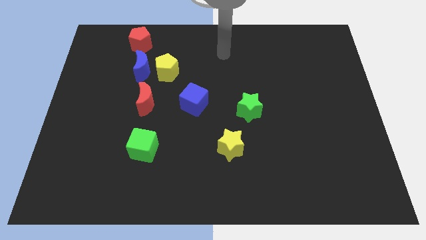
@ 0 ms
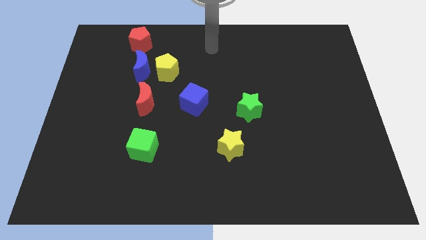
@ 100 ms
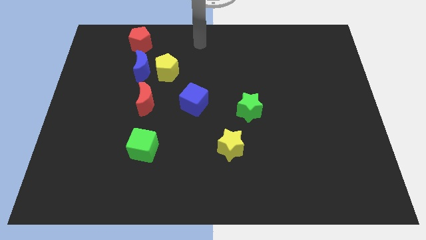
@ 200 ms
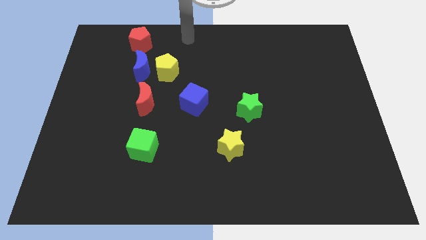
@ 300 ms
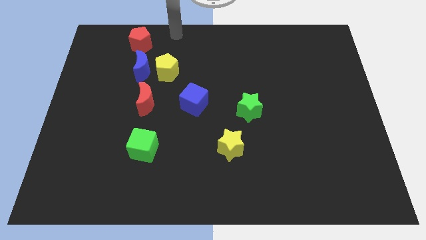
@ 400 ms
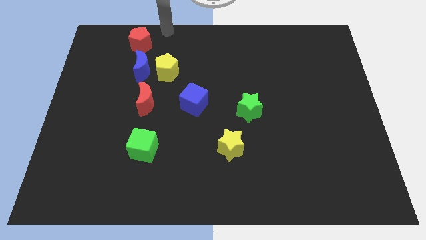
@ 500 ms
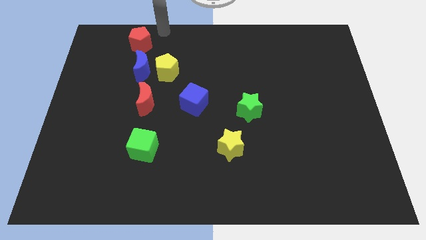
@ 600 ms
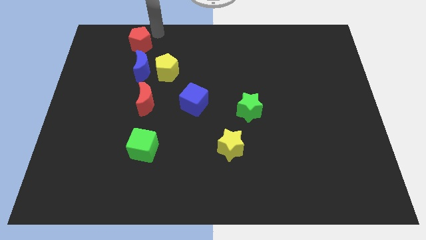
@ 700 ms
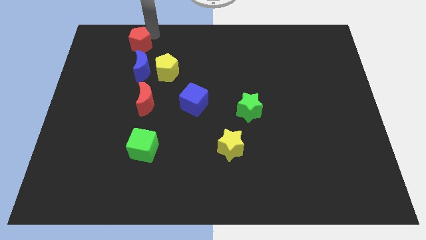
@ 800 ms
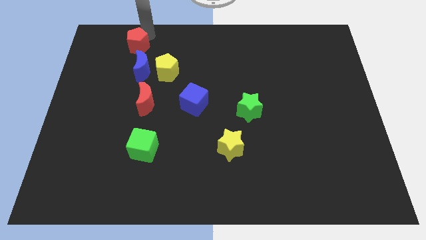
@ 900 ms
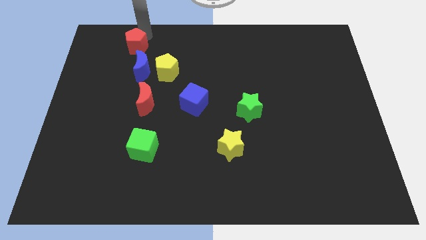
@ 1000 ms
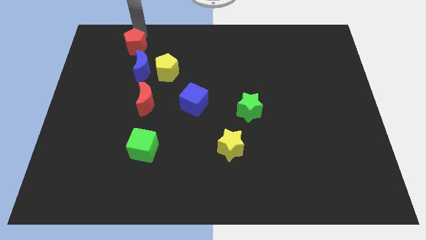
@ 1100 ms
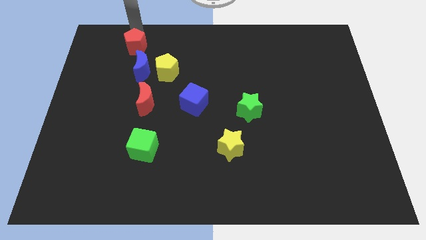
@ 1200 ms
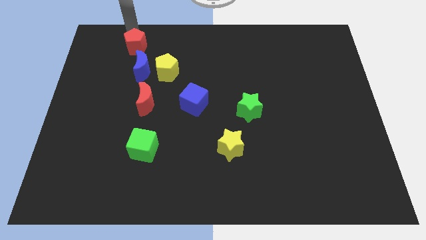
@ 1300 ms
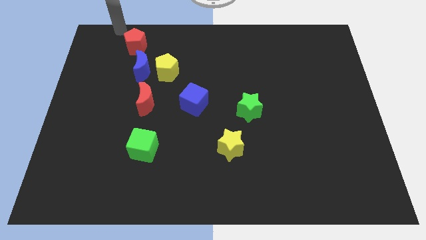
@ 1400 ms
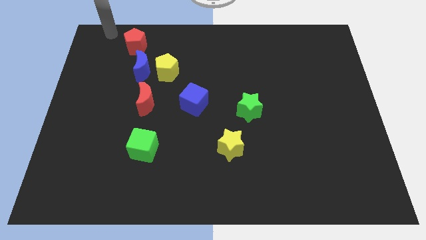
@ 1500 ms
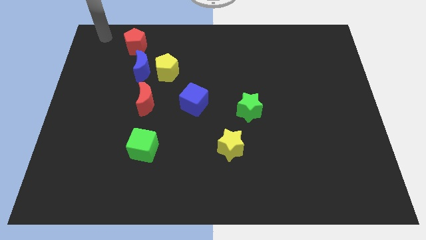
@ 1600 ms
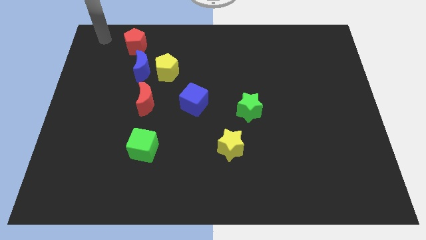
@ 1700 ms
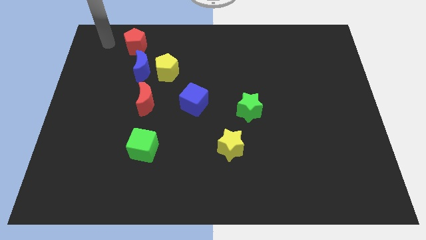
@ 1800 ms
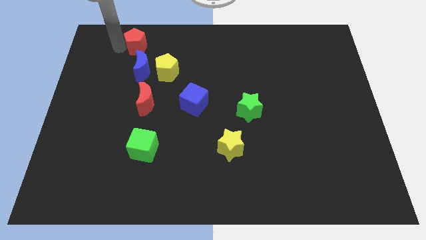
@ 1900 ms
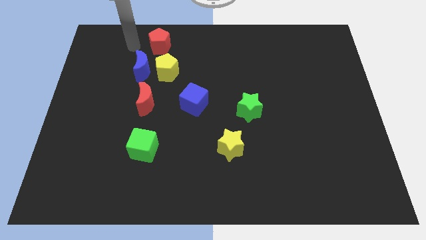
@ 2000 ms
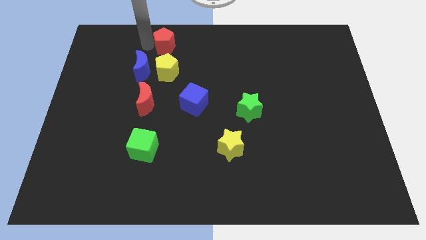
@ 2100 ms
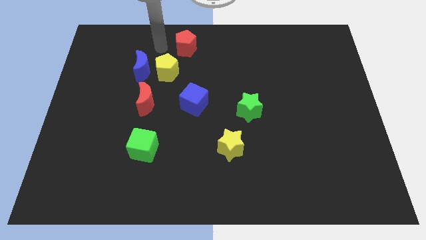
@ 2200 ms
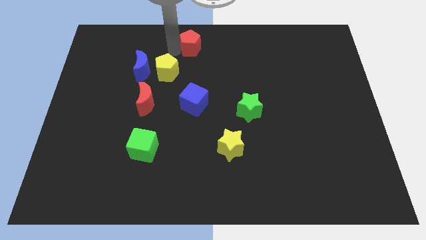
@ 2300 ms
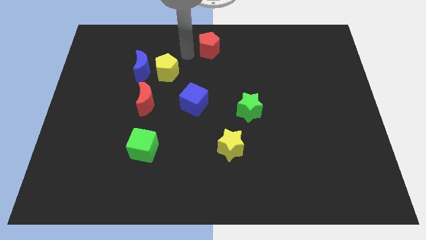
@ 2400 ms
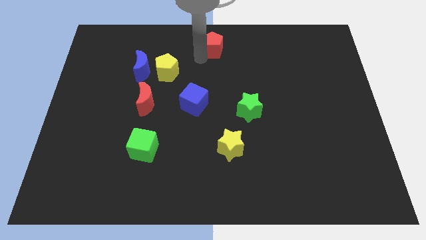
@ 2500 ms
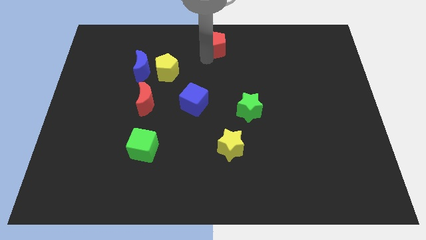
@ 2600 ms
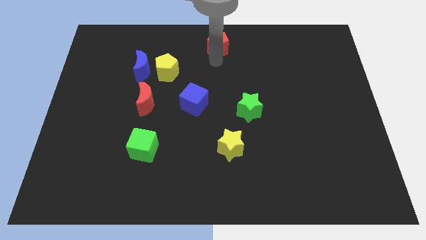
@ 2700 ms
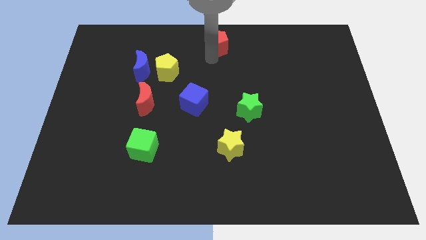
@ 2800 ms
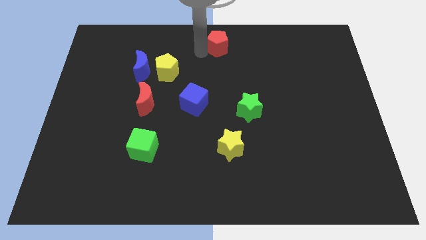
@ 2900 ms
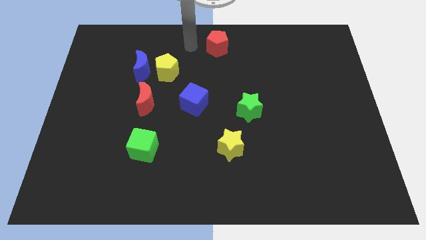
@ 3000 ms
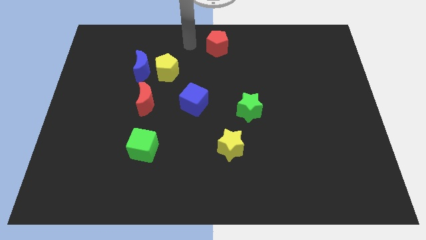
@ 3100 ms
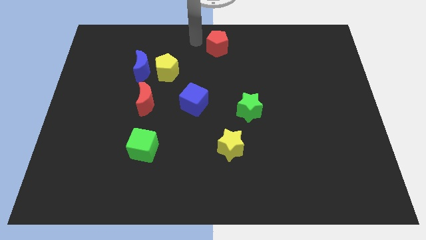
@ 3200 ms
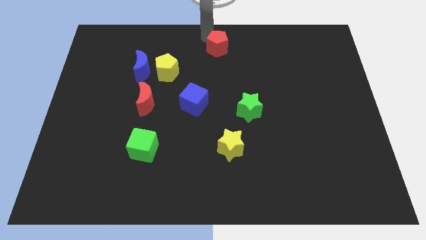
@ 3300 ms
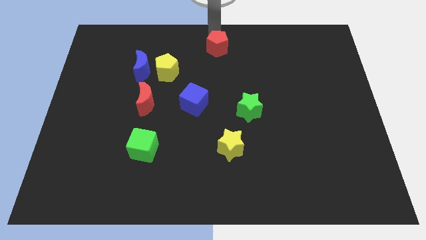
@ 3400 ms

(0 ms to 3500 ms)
move the red pentagon to the top center of the board

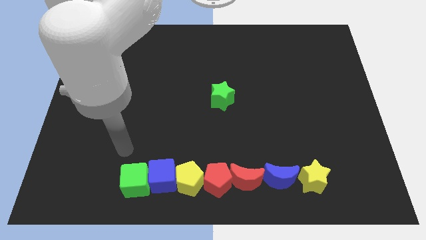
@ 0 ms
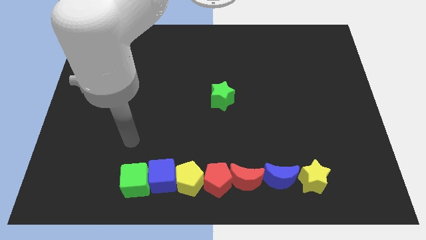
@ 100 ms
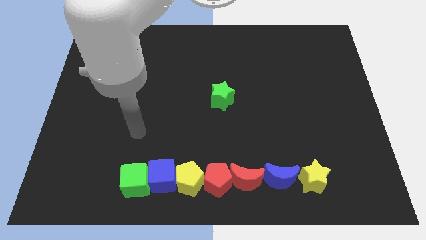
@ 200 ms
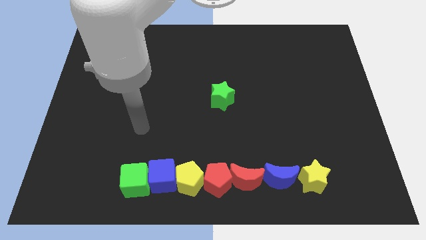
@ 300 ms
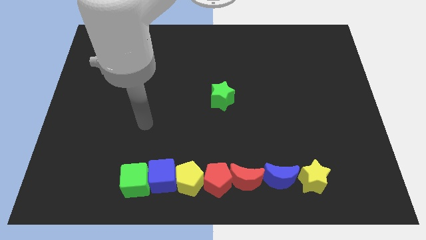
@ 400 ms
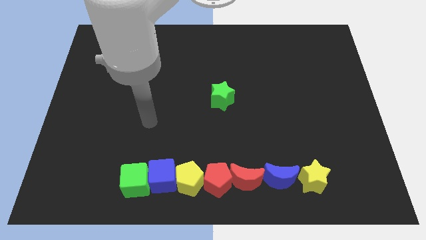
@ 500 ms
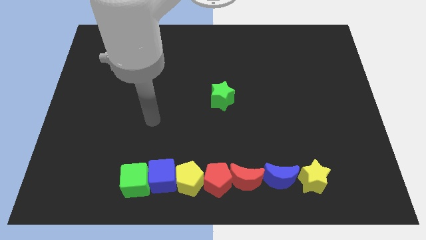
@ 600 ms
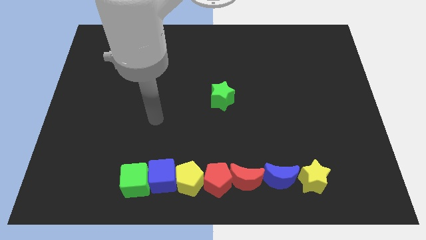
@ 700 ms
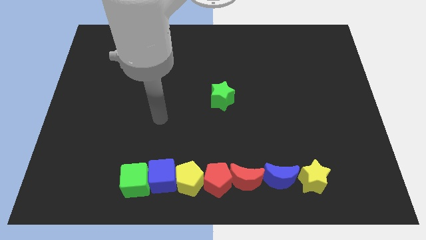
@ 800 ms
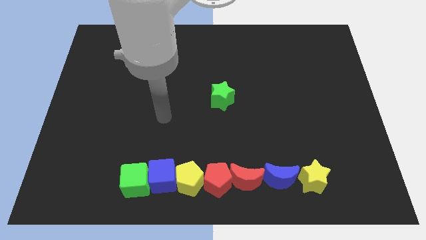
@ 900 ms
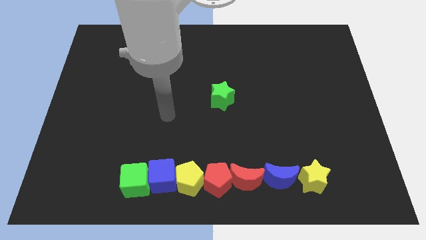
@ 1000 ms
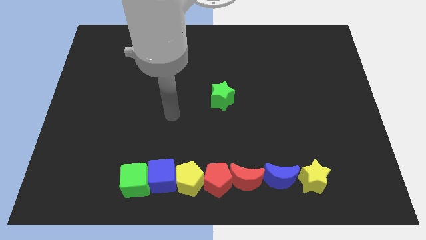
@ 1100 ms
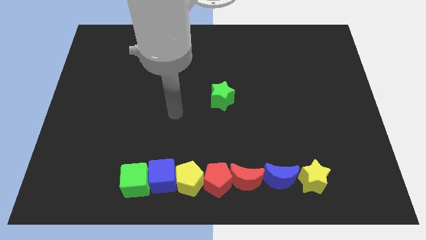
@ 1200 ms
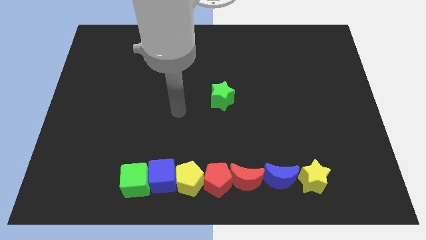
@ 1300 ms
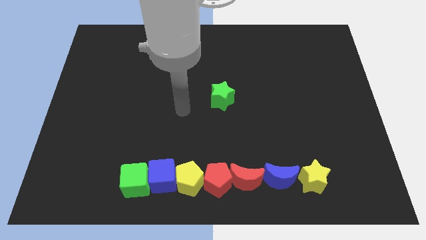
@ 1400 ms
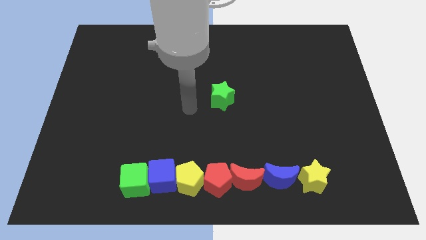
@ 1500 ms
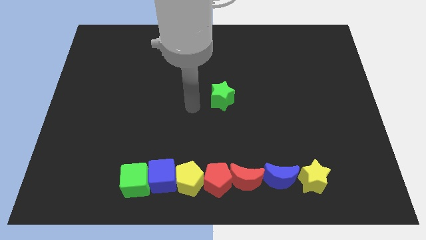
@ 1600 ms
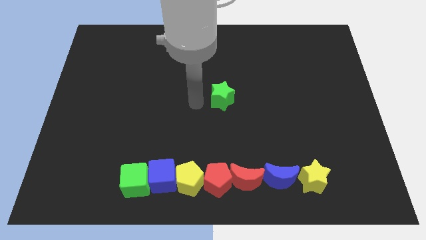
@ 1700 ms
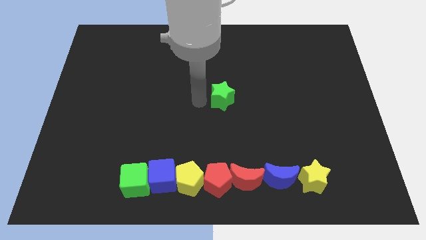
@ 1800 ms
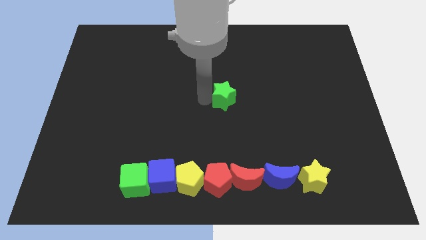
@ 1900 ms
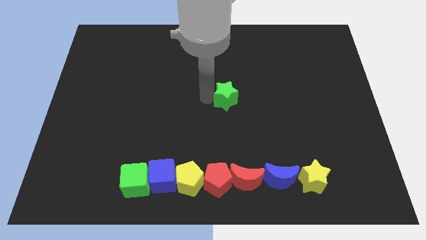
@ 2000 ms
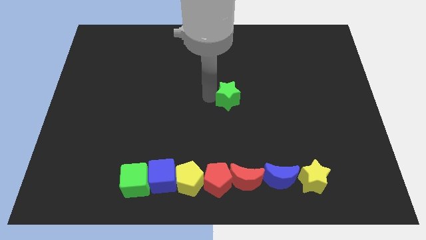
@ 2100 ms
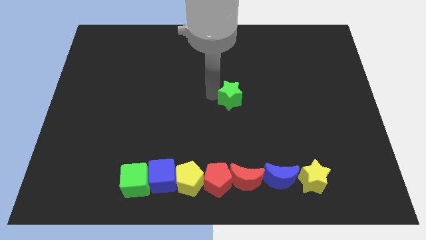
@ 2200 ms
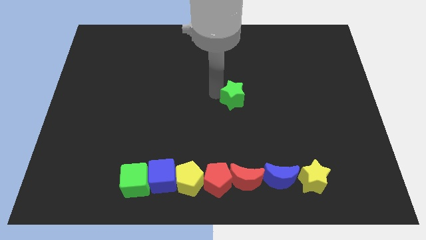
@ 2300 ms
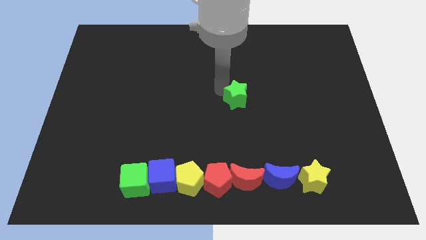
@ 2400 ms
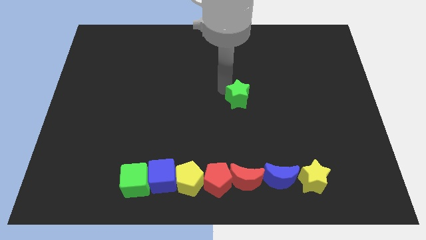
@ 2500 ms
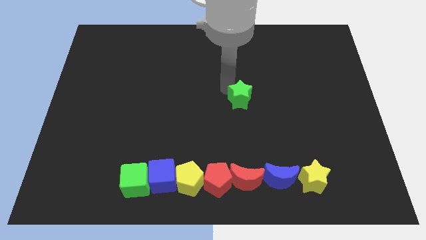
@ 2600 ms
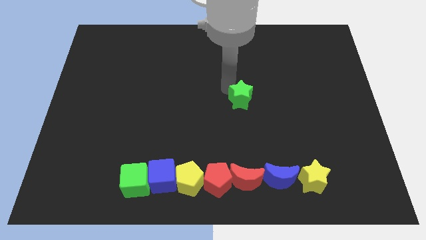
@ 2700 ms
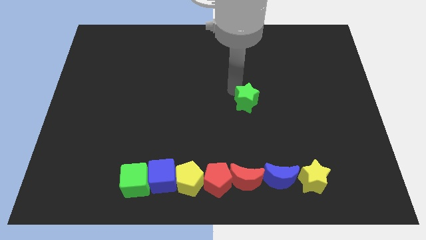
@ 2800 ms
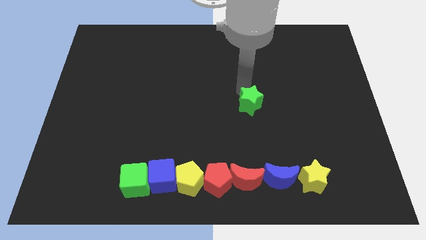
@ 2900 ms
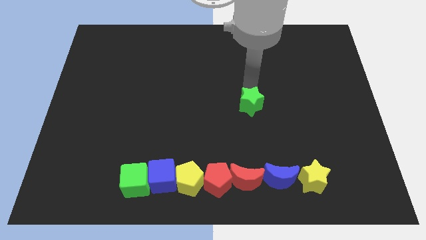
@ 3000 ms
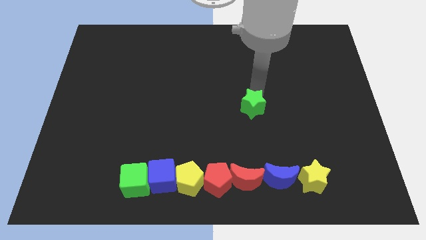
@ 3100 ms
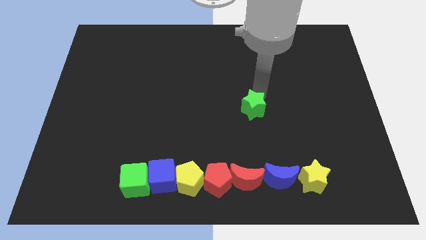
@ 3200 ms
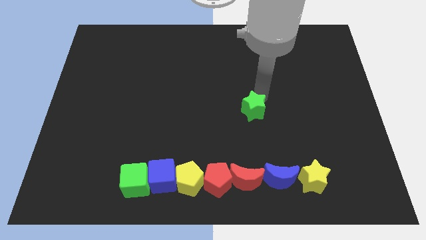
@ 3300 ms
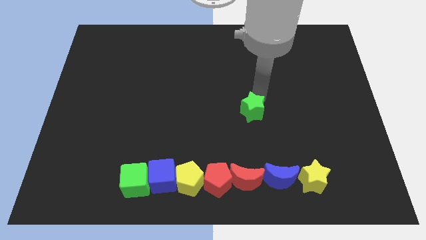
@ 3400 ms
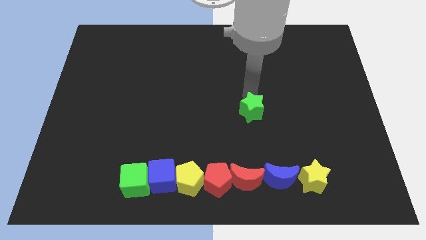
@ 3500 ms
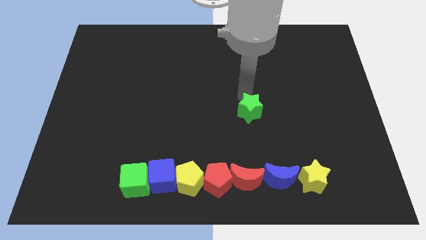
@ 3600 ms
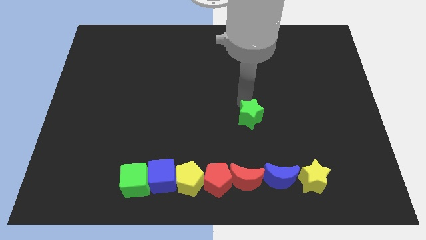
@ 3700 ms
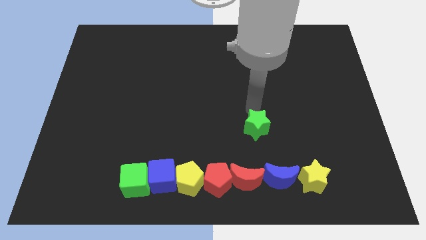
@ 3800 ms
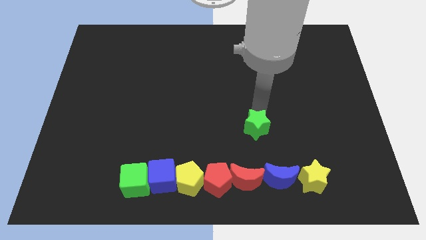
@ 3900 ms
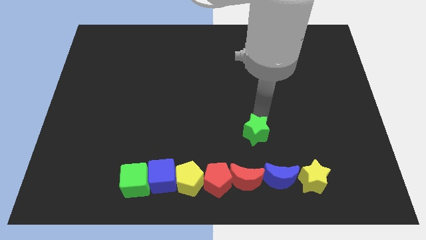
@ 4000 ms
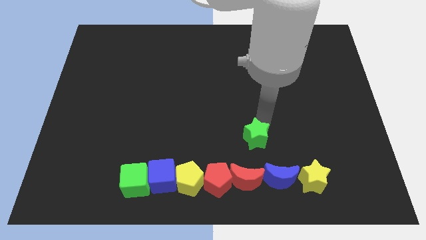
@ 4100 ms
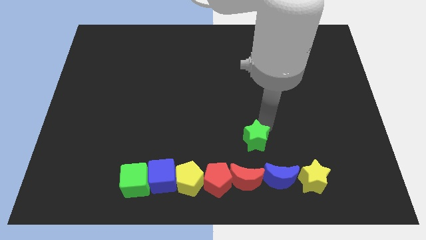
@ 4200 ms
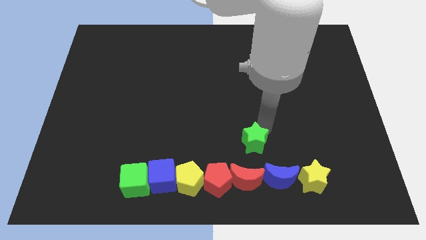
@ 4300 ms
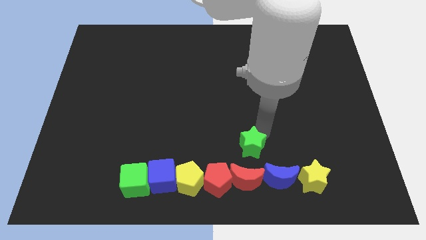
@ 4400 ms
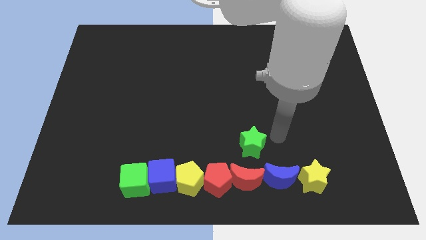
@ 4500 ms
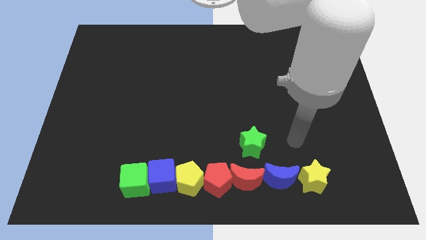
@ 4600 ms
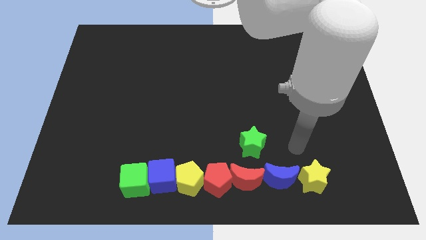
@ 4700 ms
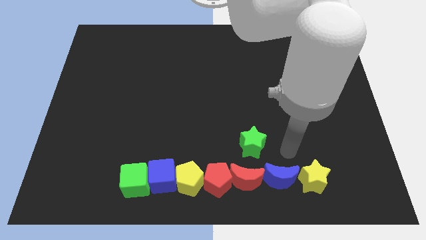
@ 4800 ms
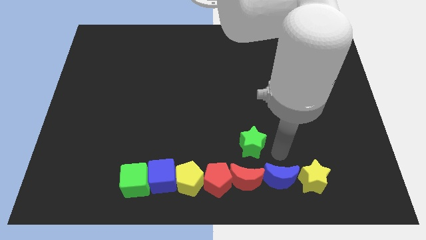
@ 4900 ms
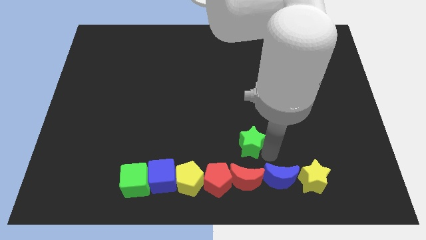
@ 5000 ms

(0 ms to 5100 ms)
place the green star above the red moon

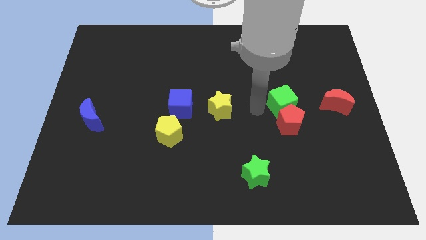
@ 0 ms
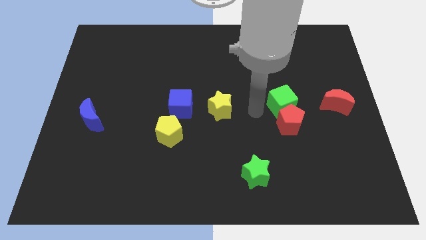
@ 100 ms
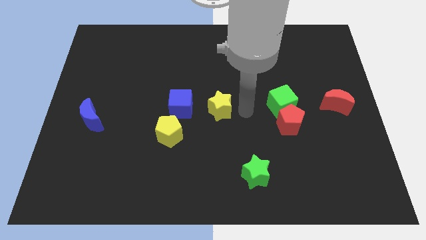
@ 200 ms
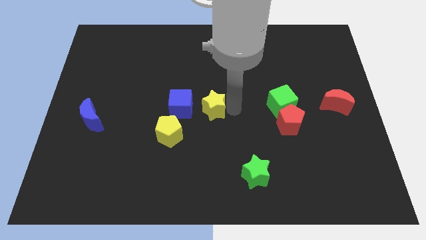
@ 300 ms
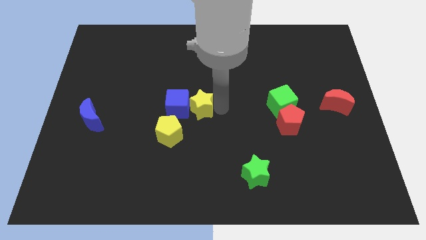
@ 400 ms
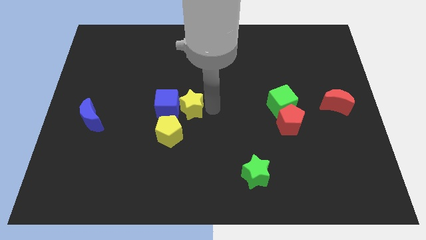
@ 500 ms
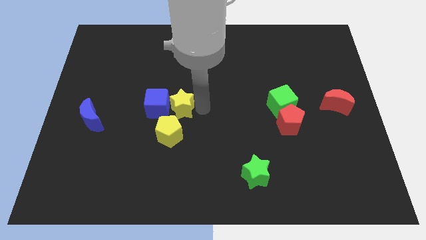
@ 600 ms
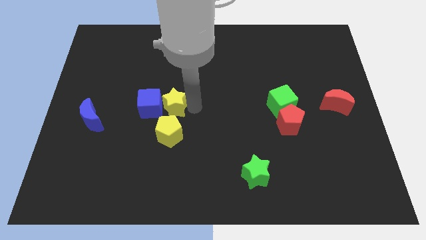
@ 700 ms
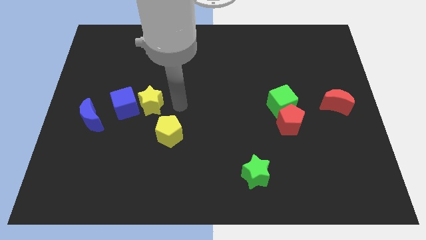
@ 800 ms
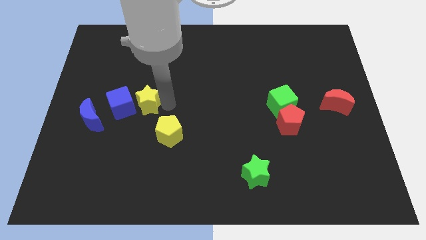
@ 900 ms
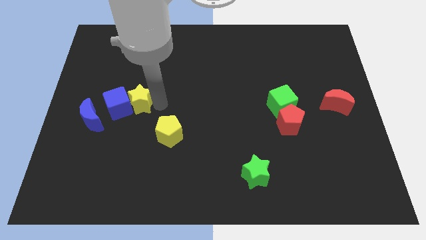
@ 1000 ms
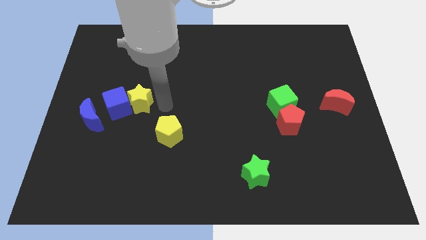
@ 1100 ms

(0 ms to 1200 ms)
push the yellow star into blue cube
